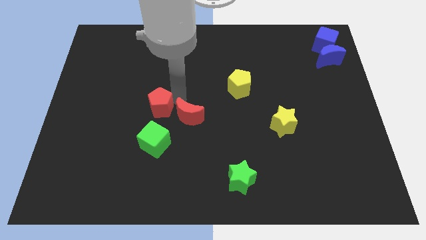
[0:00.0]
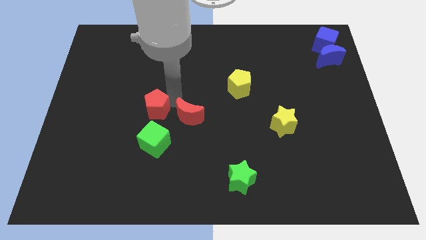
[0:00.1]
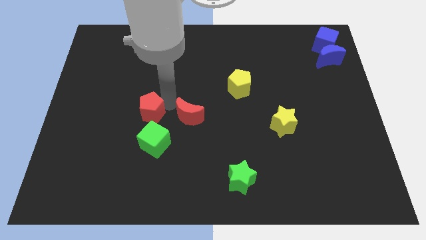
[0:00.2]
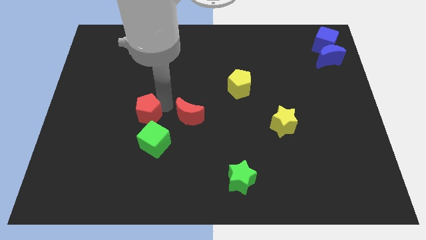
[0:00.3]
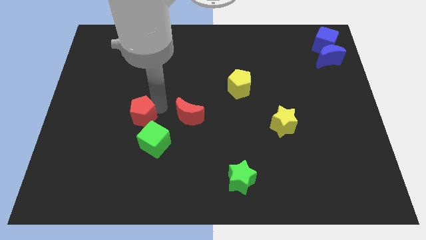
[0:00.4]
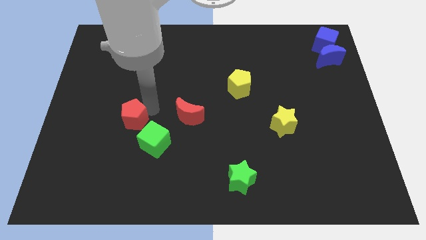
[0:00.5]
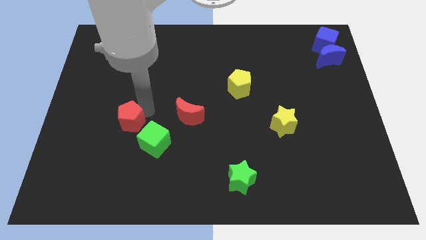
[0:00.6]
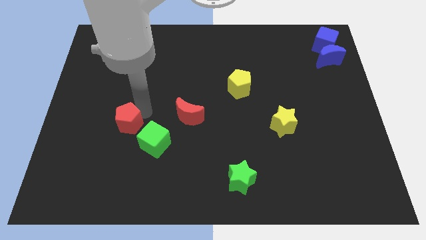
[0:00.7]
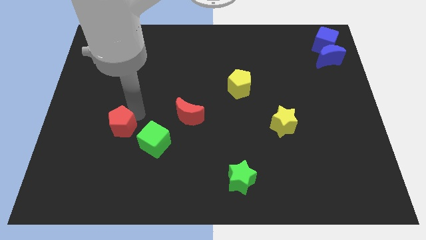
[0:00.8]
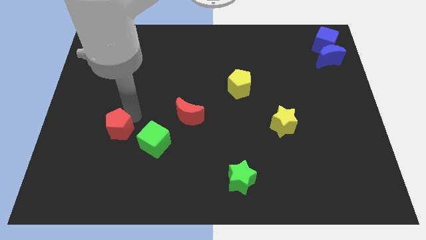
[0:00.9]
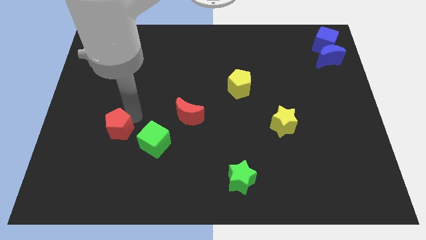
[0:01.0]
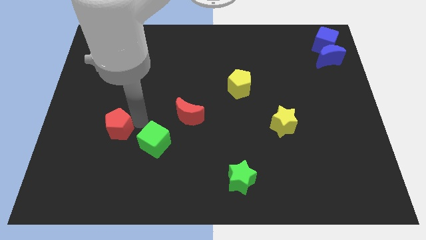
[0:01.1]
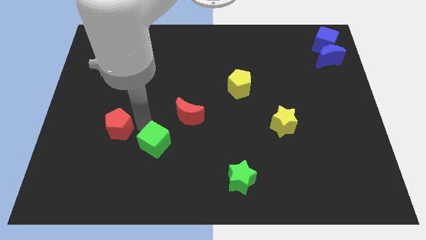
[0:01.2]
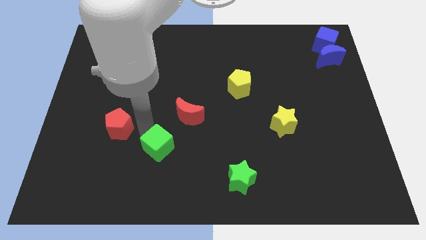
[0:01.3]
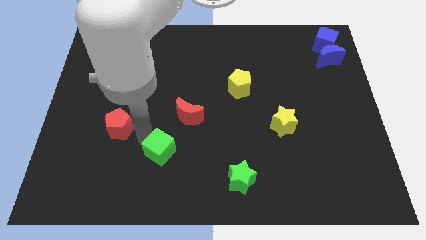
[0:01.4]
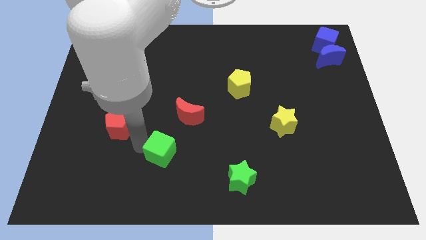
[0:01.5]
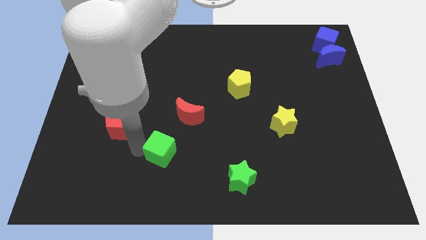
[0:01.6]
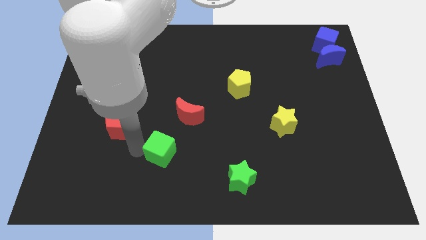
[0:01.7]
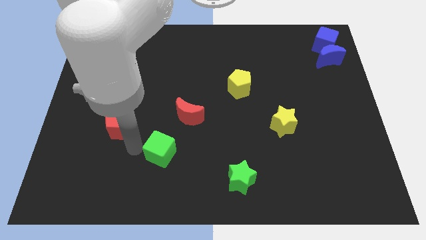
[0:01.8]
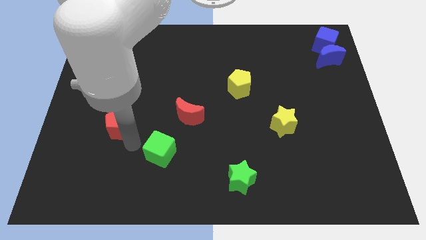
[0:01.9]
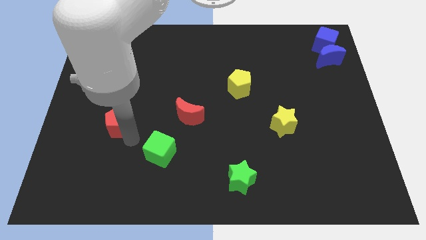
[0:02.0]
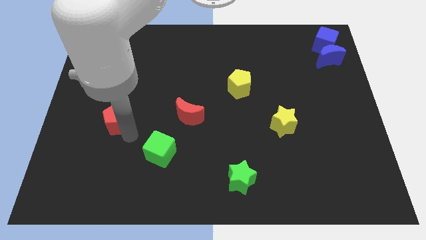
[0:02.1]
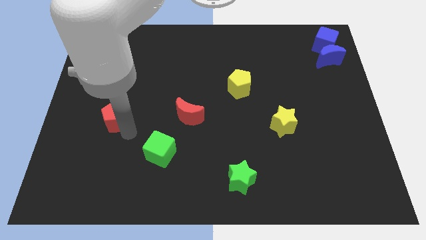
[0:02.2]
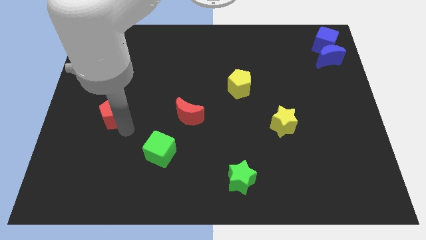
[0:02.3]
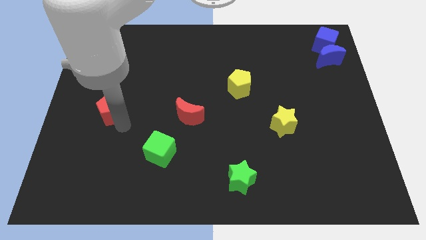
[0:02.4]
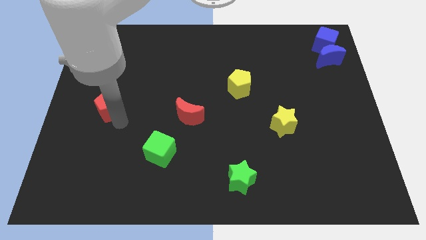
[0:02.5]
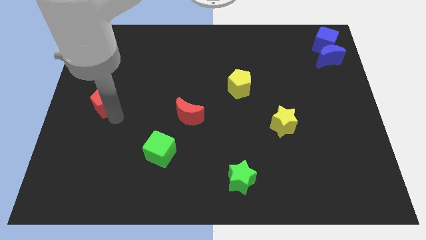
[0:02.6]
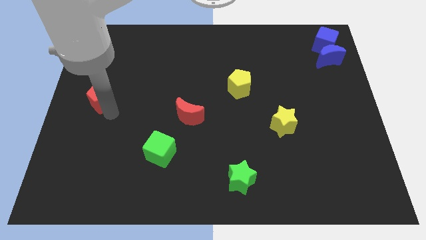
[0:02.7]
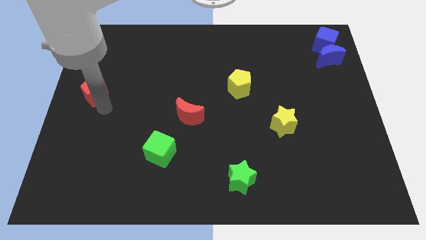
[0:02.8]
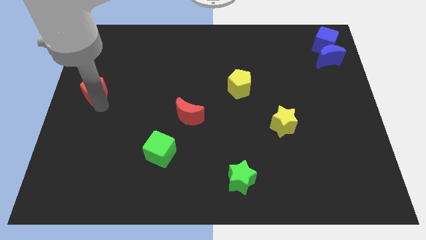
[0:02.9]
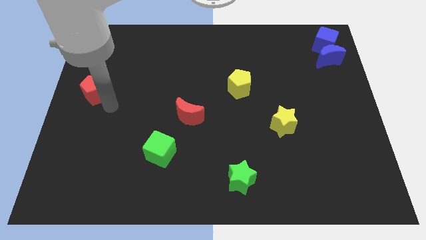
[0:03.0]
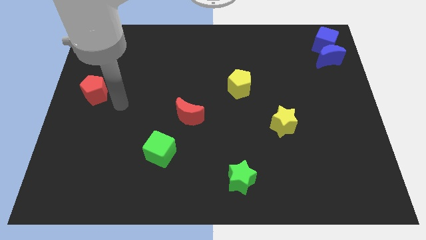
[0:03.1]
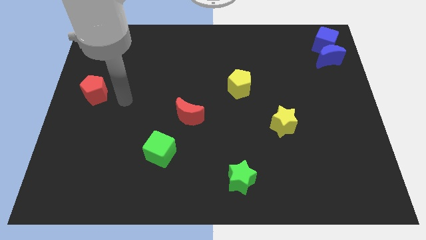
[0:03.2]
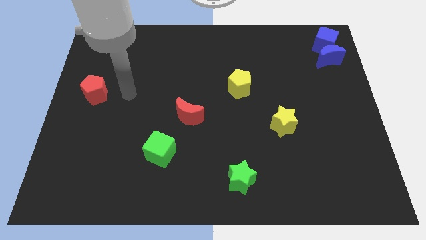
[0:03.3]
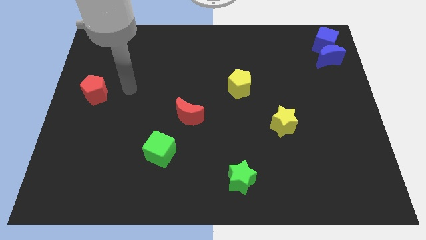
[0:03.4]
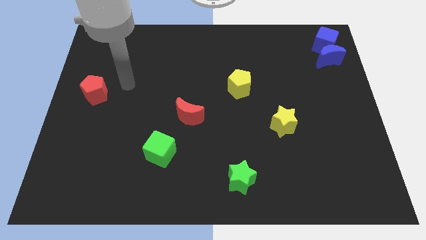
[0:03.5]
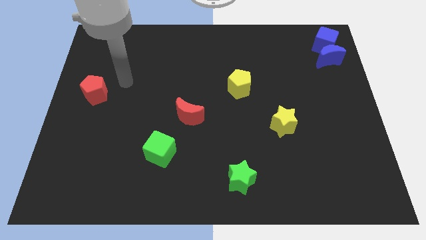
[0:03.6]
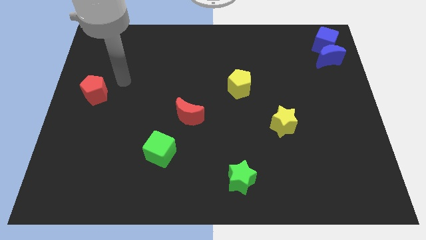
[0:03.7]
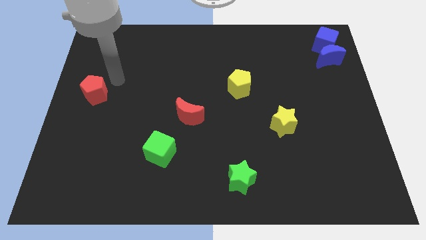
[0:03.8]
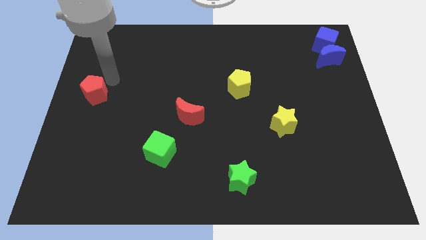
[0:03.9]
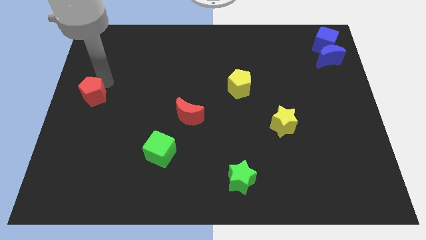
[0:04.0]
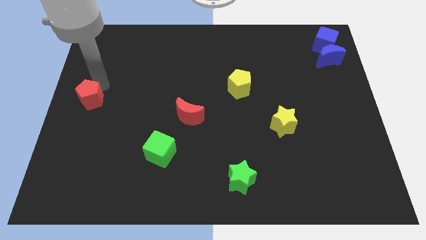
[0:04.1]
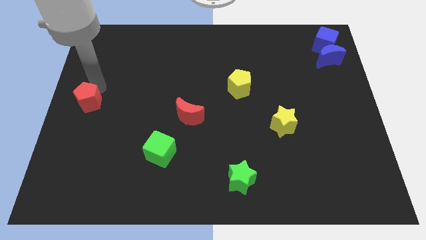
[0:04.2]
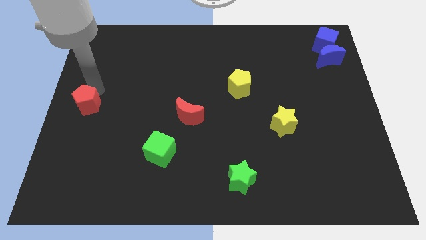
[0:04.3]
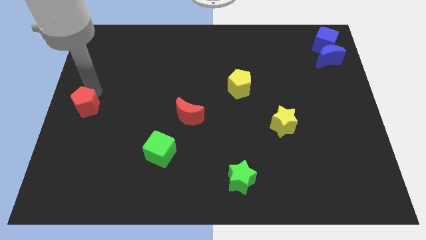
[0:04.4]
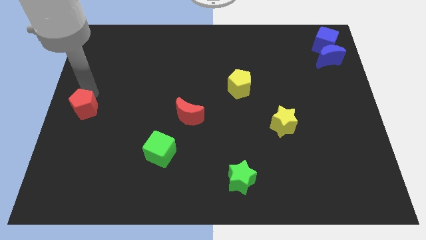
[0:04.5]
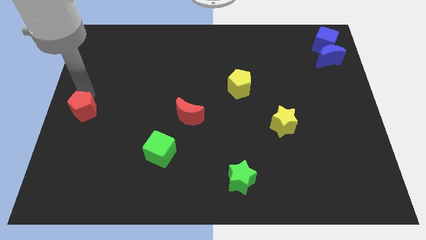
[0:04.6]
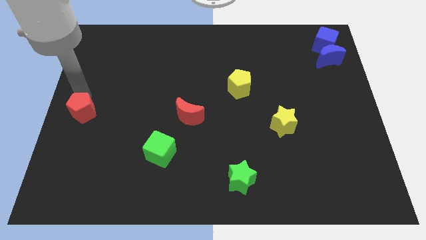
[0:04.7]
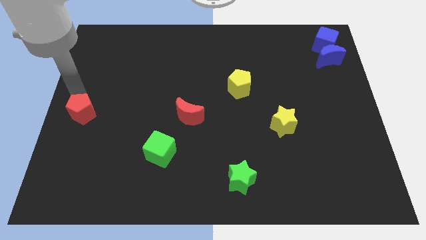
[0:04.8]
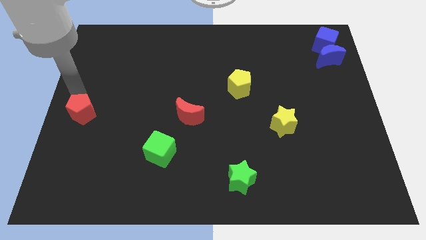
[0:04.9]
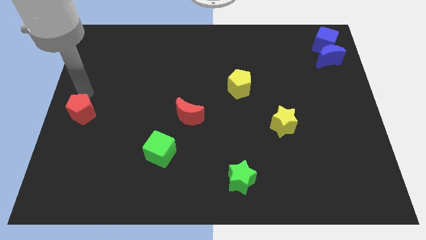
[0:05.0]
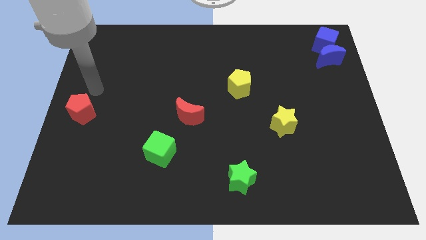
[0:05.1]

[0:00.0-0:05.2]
move red pentagon towards the left corner of the board

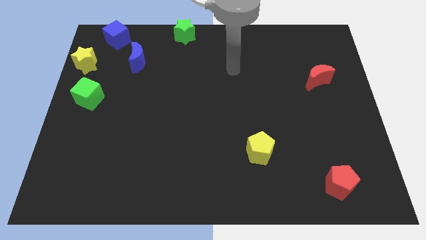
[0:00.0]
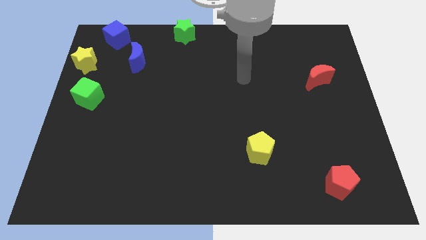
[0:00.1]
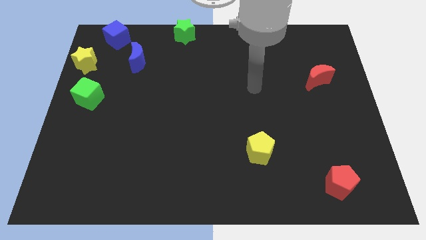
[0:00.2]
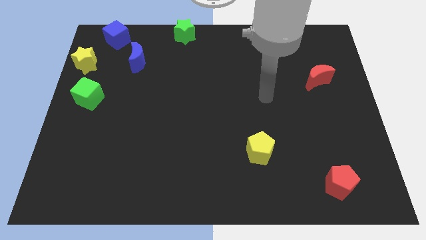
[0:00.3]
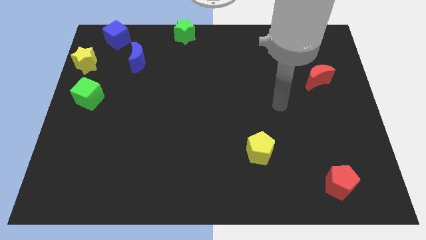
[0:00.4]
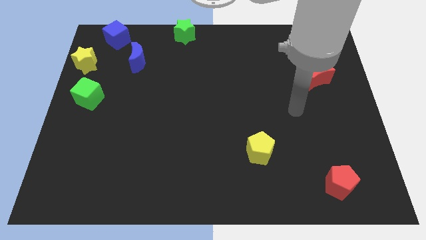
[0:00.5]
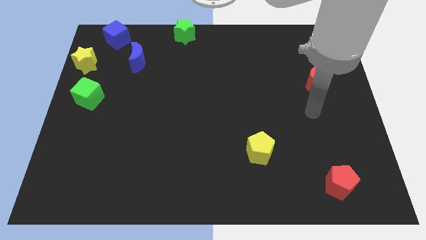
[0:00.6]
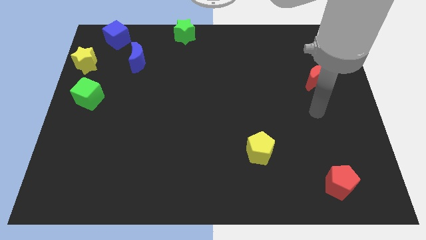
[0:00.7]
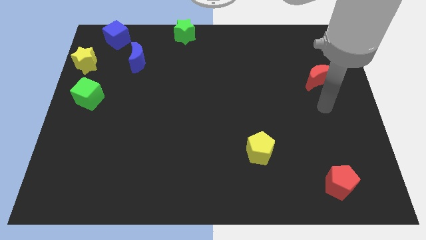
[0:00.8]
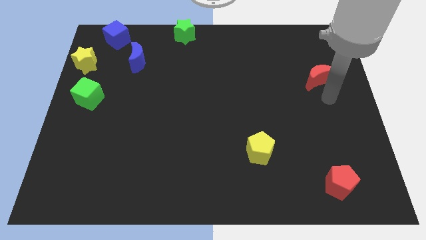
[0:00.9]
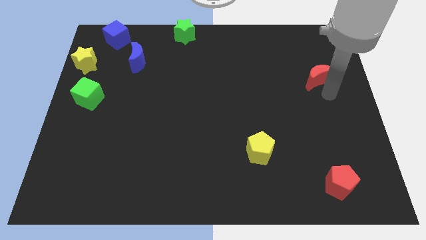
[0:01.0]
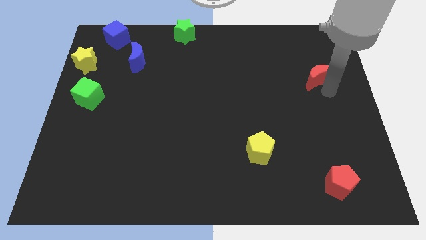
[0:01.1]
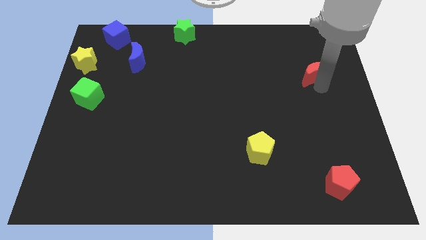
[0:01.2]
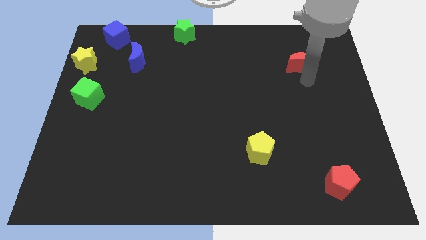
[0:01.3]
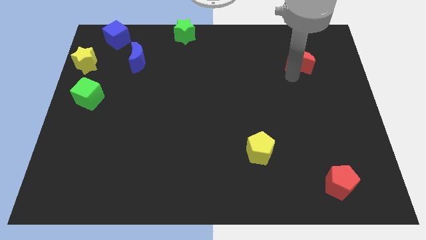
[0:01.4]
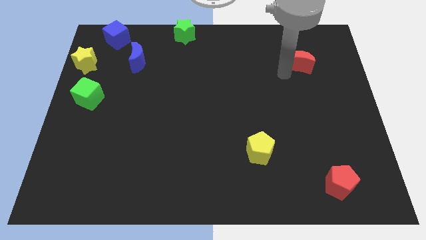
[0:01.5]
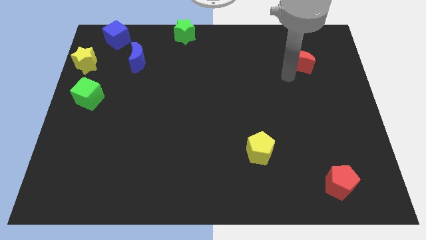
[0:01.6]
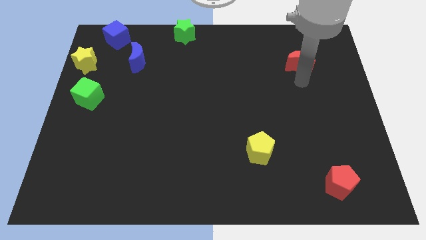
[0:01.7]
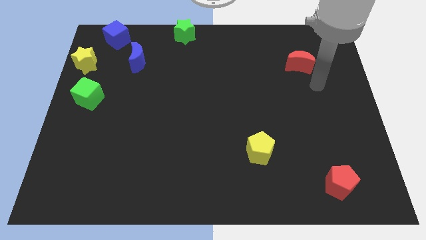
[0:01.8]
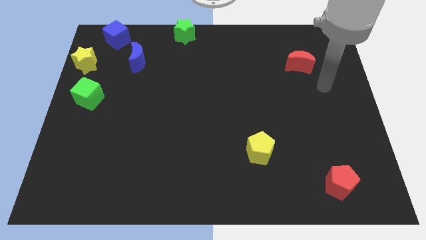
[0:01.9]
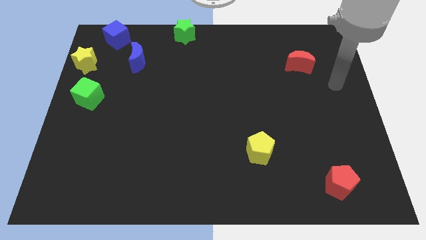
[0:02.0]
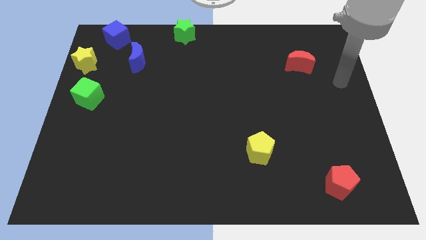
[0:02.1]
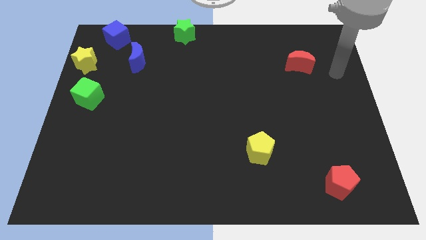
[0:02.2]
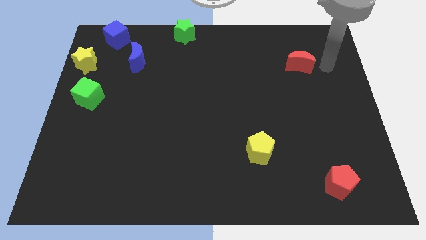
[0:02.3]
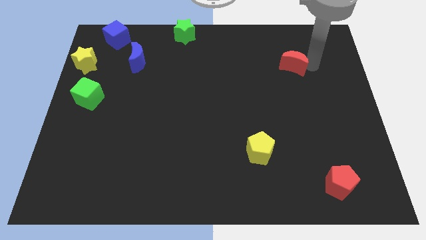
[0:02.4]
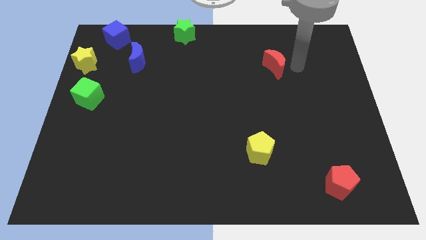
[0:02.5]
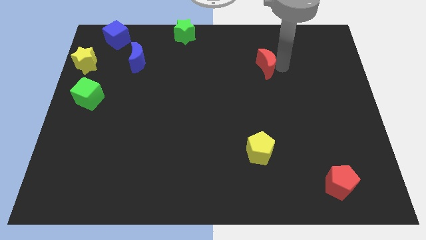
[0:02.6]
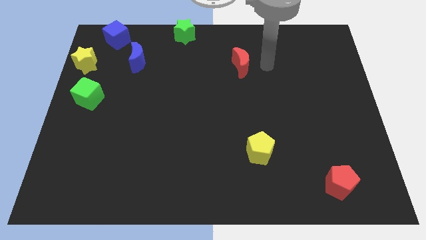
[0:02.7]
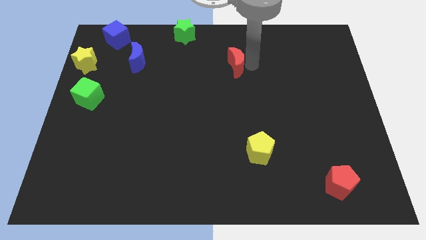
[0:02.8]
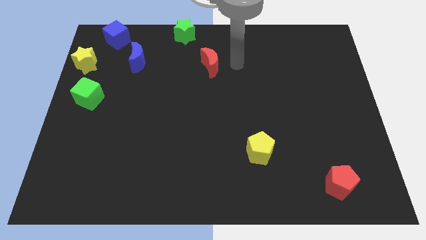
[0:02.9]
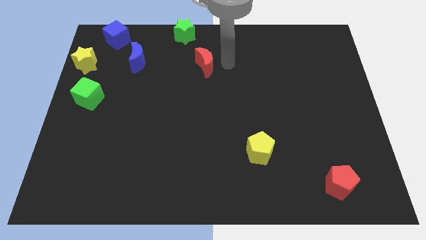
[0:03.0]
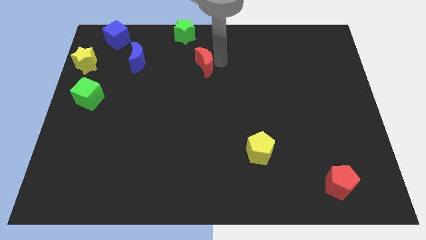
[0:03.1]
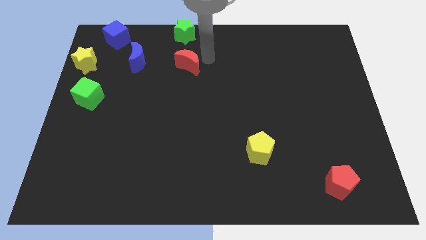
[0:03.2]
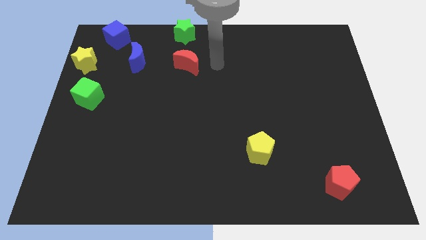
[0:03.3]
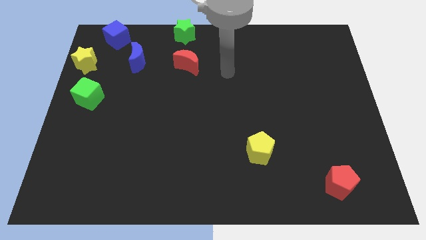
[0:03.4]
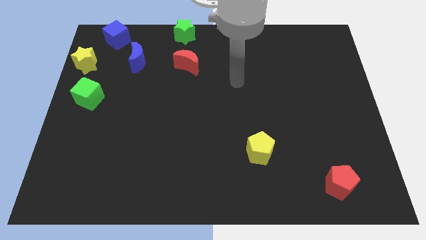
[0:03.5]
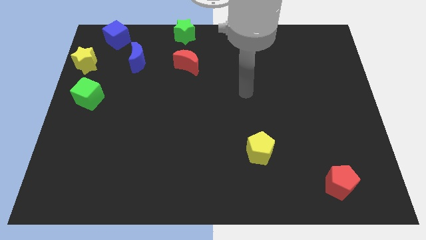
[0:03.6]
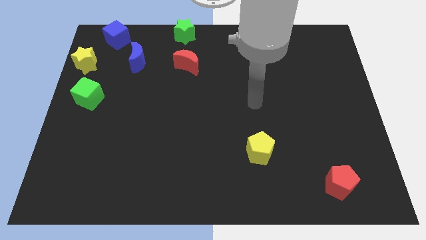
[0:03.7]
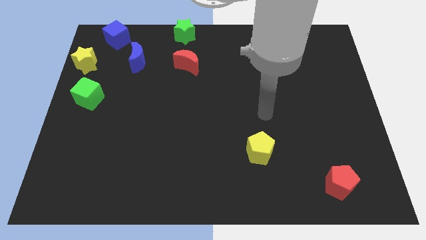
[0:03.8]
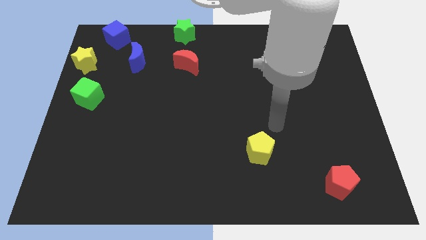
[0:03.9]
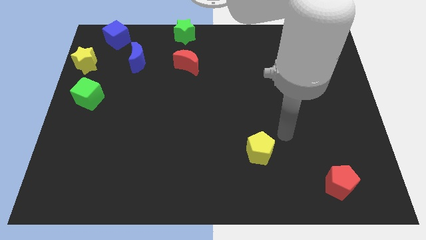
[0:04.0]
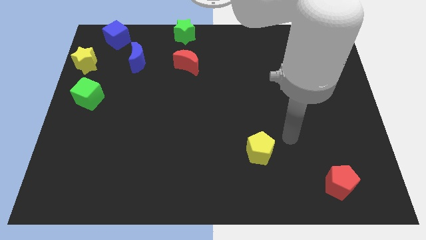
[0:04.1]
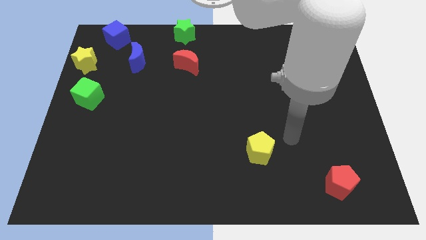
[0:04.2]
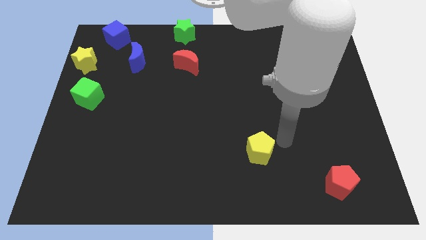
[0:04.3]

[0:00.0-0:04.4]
move red moon below green star
